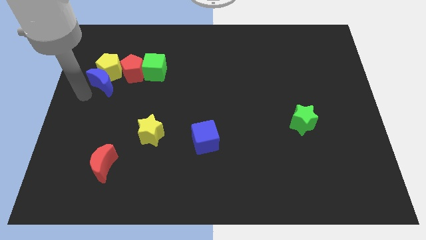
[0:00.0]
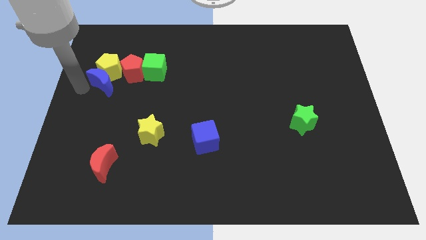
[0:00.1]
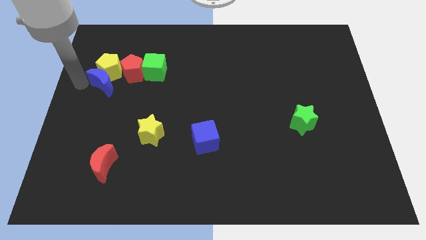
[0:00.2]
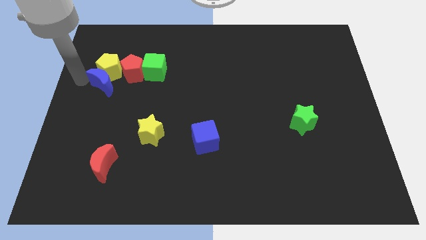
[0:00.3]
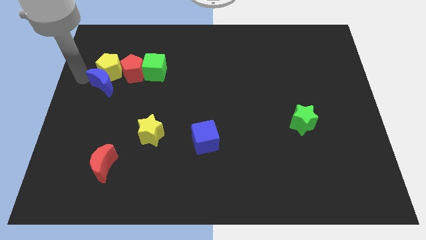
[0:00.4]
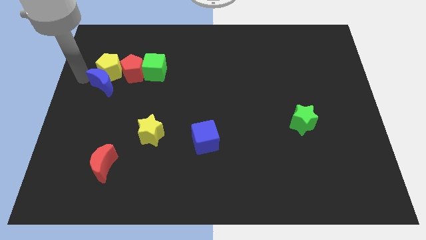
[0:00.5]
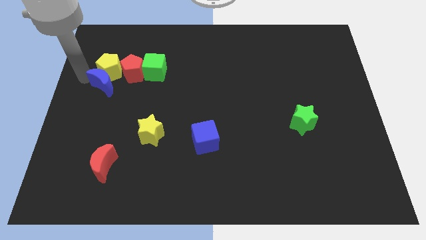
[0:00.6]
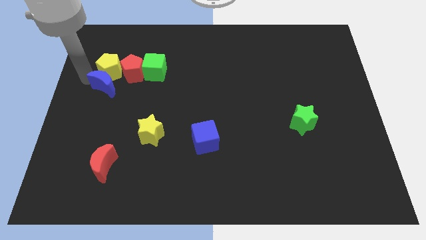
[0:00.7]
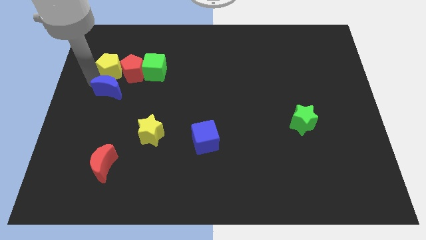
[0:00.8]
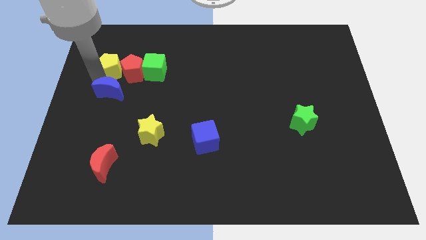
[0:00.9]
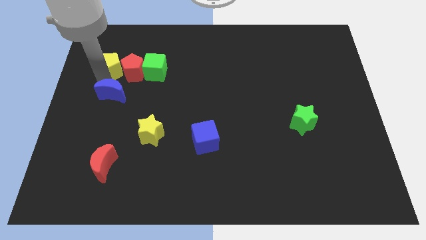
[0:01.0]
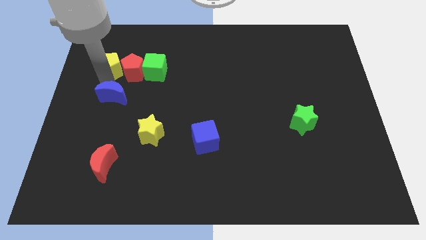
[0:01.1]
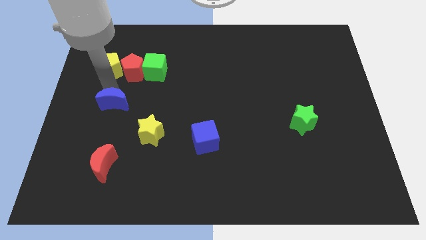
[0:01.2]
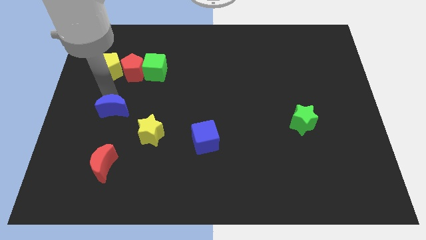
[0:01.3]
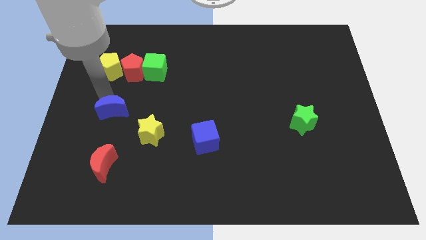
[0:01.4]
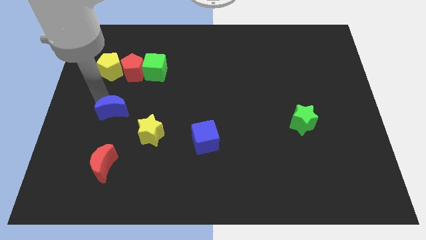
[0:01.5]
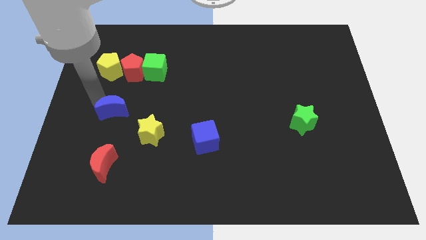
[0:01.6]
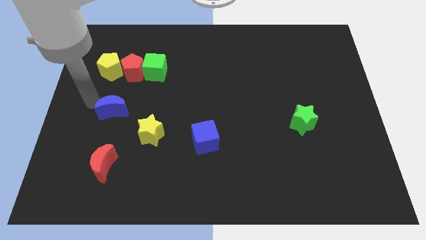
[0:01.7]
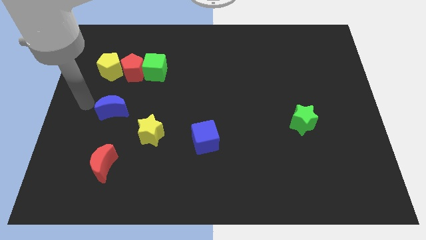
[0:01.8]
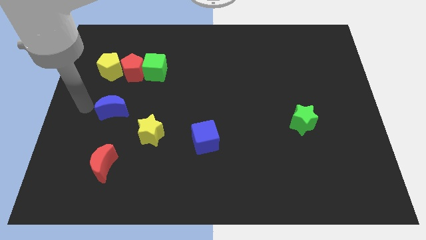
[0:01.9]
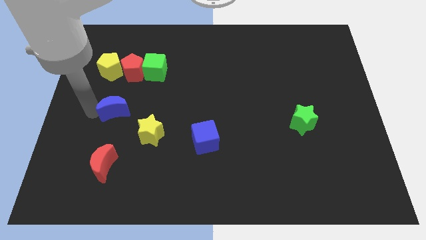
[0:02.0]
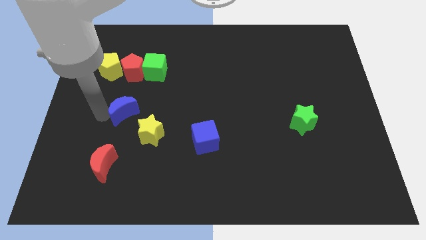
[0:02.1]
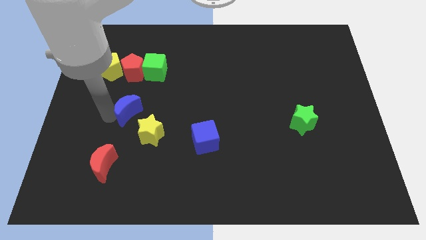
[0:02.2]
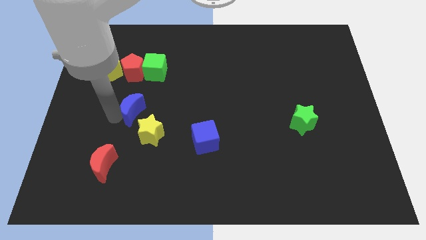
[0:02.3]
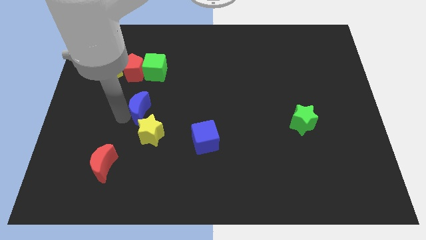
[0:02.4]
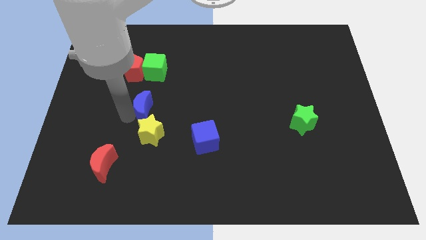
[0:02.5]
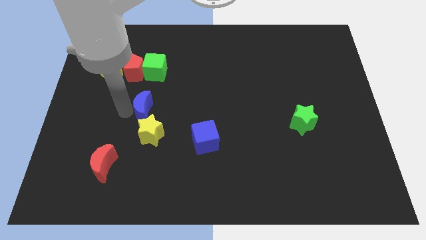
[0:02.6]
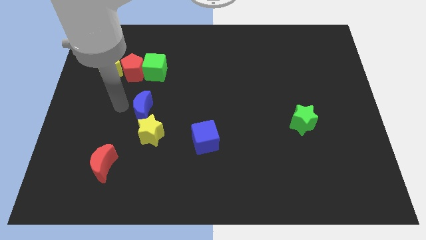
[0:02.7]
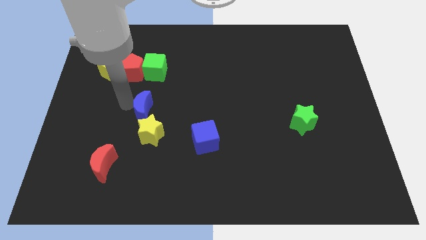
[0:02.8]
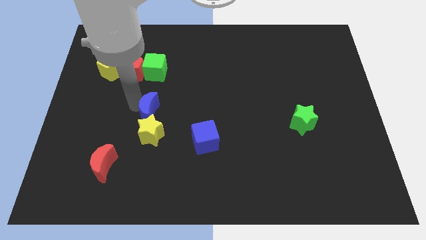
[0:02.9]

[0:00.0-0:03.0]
place the blue moon above the yellow star

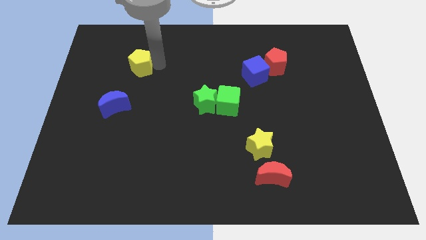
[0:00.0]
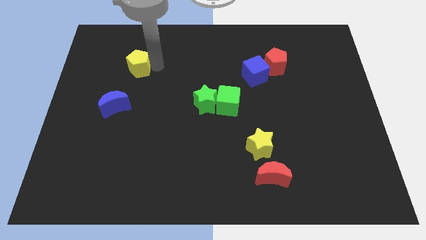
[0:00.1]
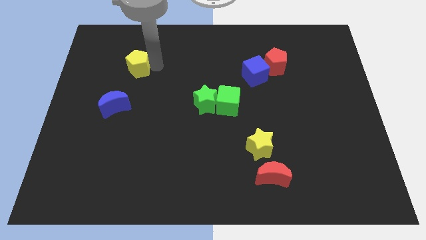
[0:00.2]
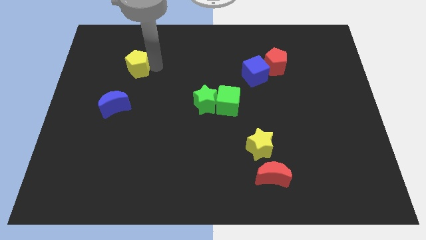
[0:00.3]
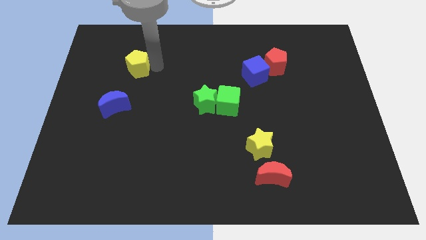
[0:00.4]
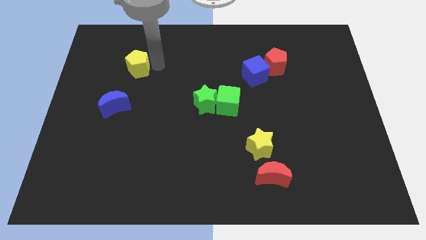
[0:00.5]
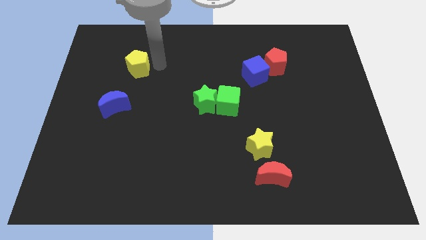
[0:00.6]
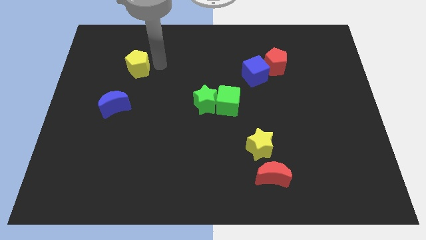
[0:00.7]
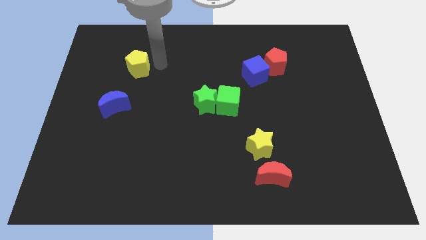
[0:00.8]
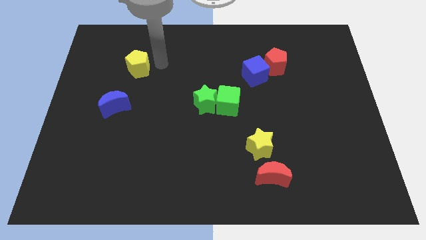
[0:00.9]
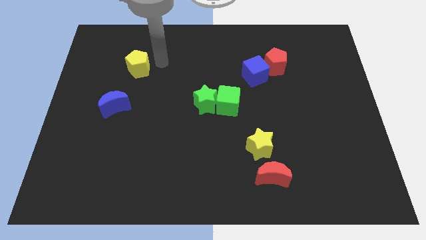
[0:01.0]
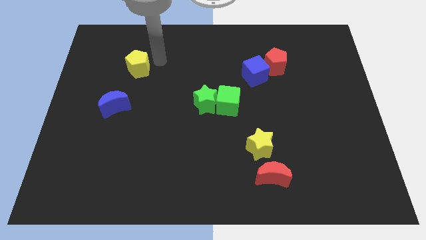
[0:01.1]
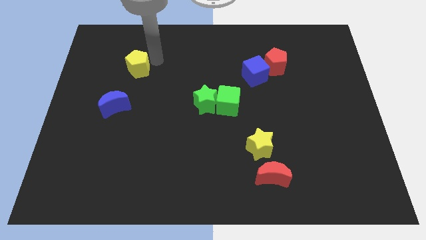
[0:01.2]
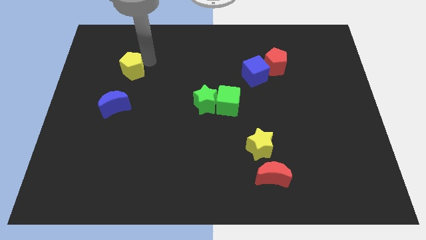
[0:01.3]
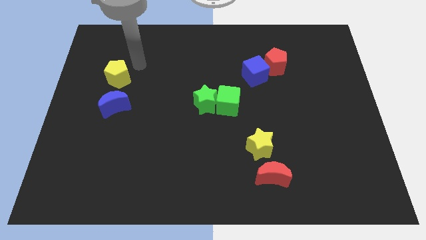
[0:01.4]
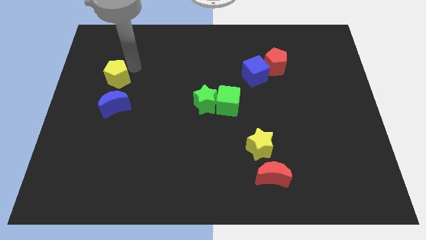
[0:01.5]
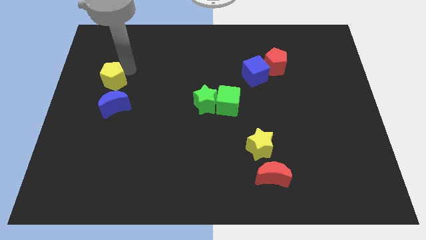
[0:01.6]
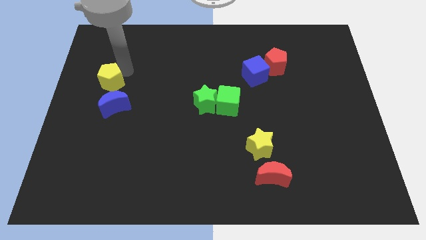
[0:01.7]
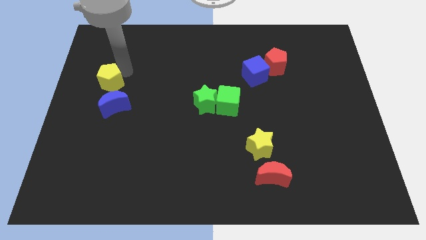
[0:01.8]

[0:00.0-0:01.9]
slide the yellow pentagon above the blue moon

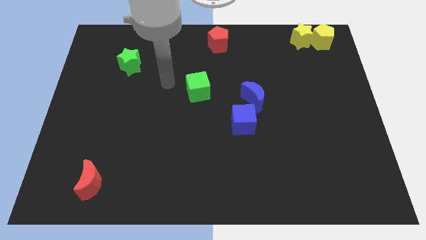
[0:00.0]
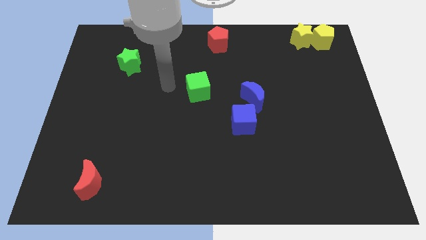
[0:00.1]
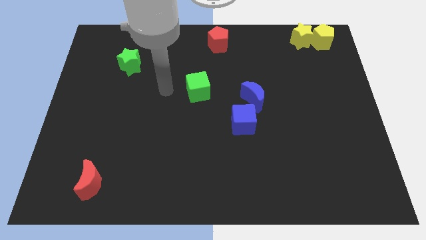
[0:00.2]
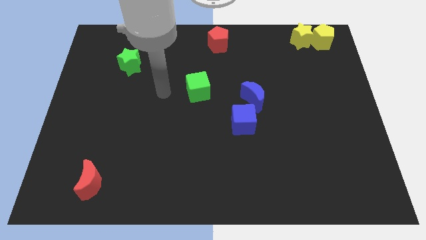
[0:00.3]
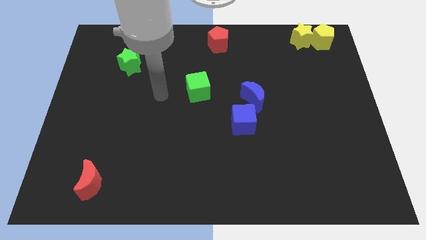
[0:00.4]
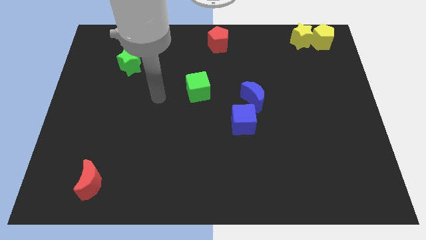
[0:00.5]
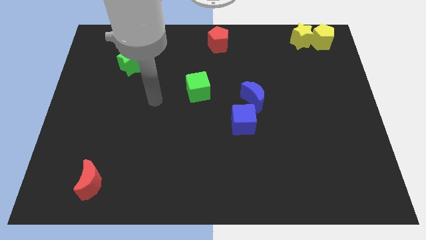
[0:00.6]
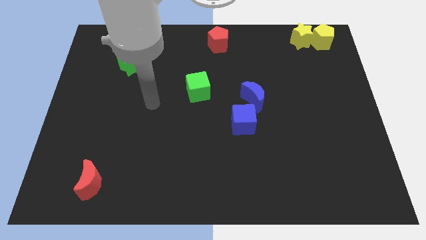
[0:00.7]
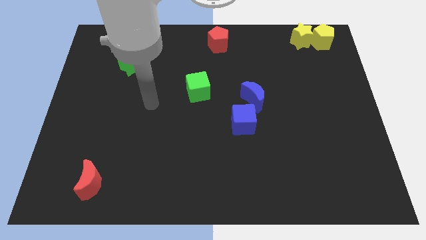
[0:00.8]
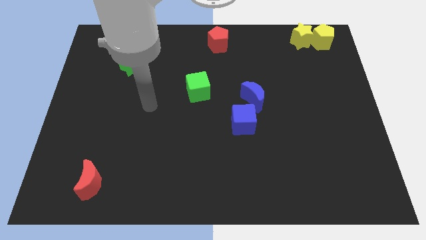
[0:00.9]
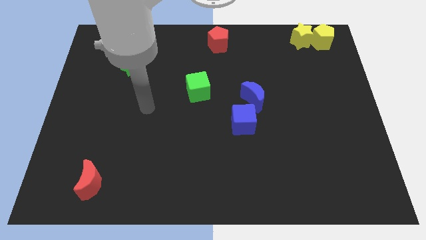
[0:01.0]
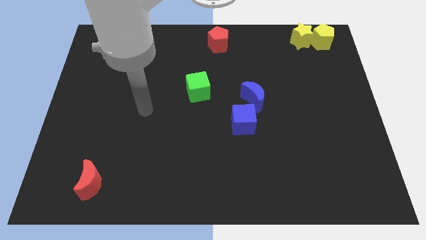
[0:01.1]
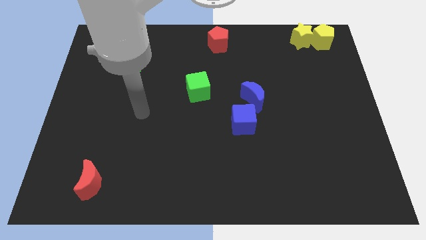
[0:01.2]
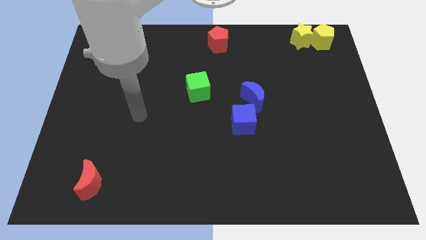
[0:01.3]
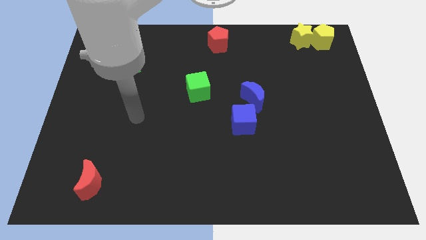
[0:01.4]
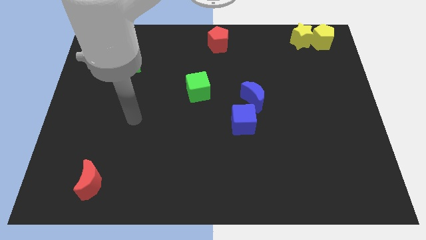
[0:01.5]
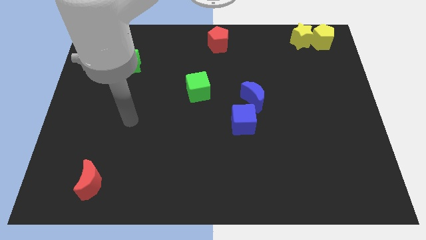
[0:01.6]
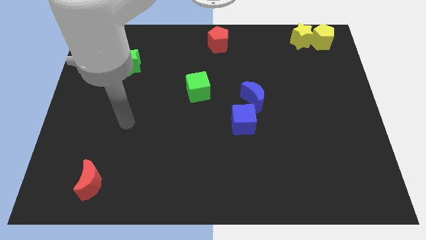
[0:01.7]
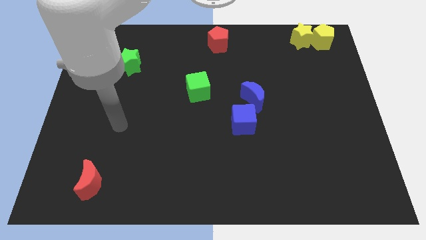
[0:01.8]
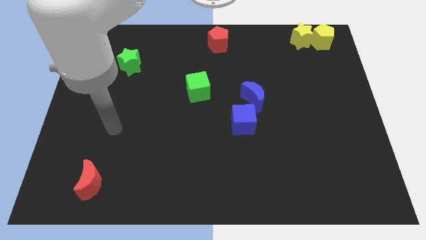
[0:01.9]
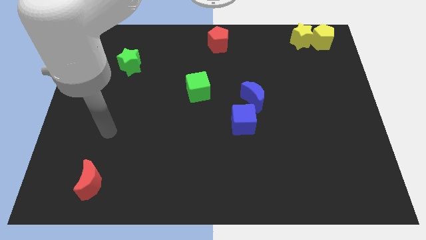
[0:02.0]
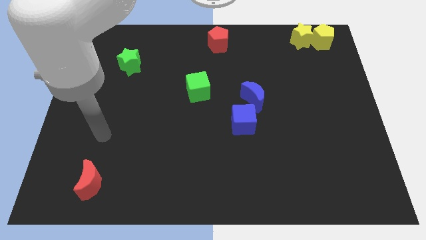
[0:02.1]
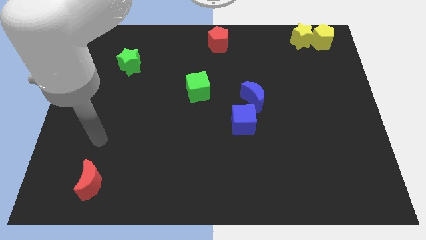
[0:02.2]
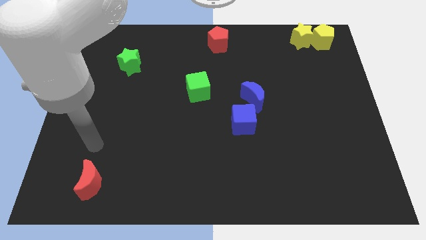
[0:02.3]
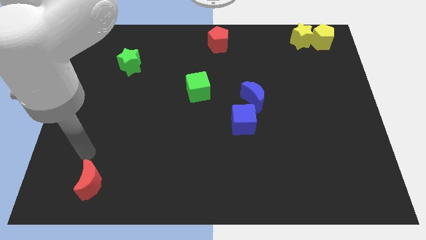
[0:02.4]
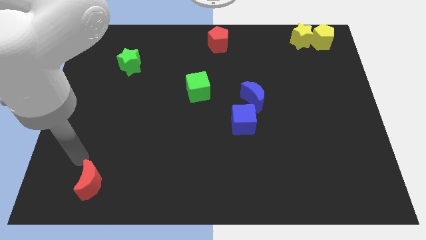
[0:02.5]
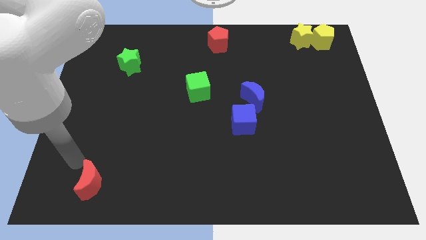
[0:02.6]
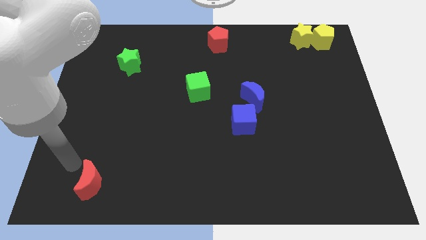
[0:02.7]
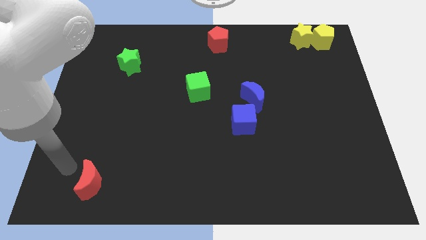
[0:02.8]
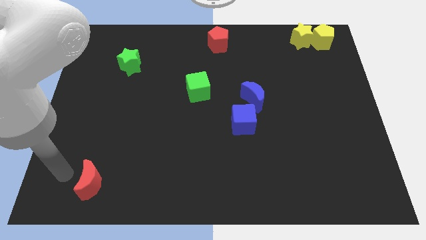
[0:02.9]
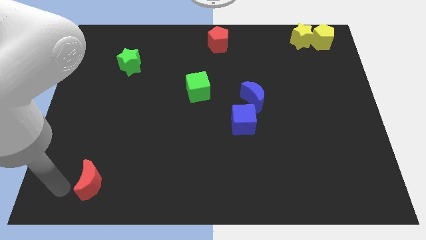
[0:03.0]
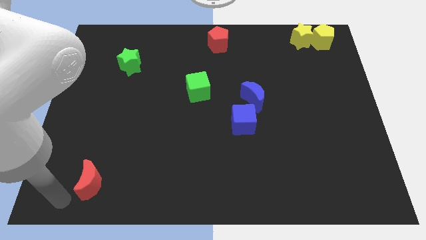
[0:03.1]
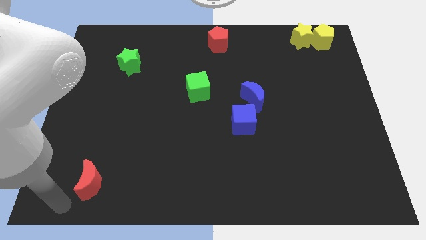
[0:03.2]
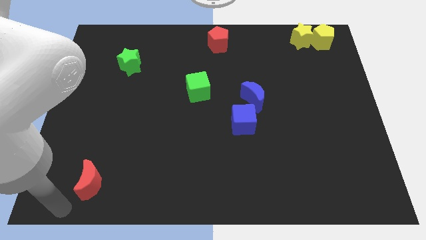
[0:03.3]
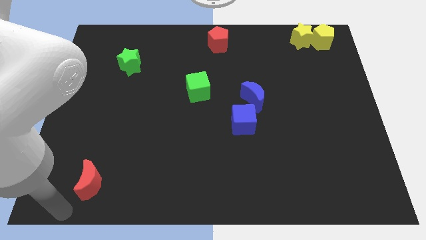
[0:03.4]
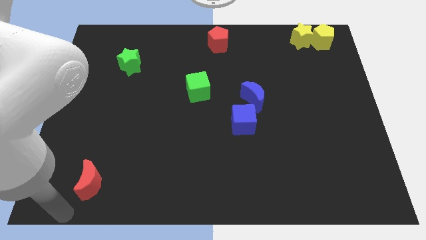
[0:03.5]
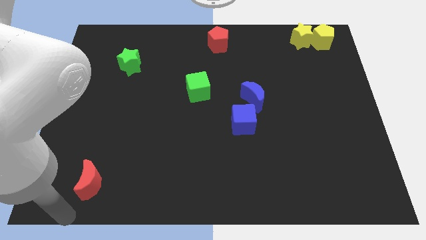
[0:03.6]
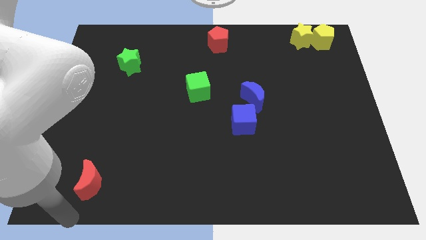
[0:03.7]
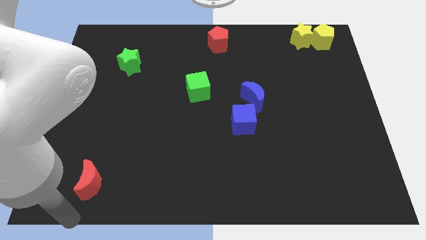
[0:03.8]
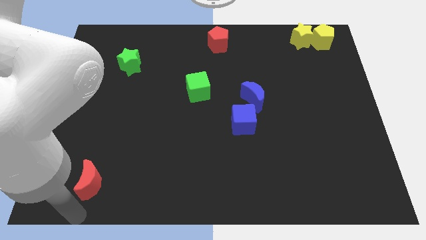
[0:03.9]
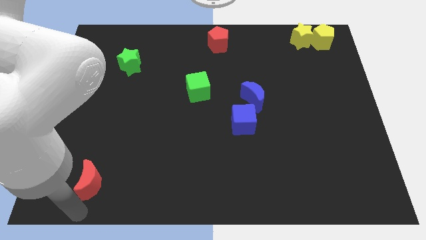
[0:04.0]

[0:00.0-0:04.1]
place the arm on the down side of the red moon
